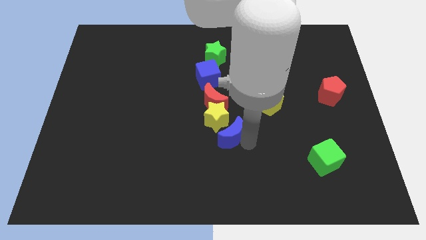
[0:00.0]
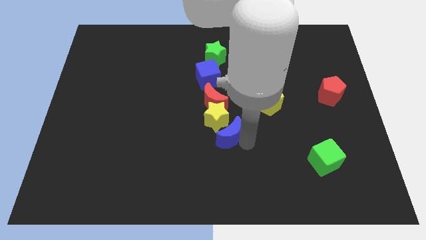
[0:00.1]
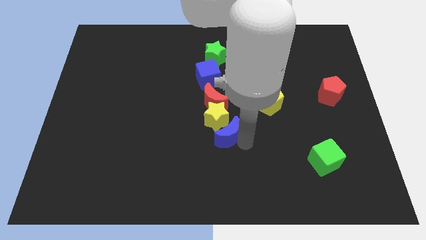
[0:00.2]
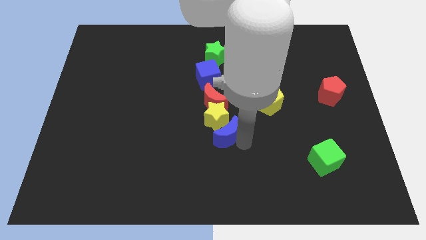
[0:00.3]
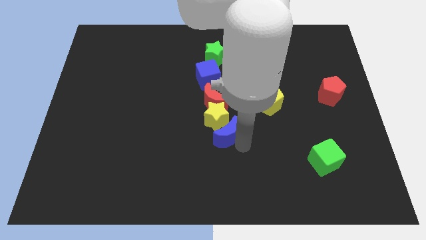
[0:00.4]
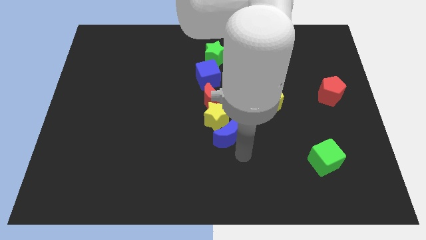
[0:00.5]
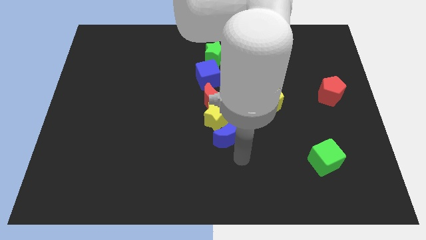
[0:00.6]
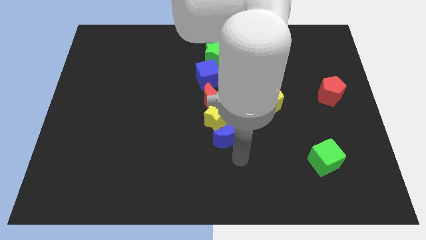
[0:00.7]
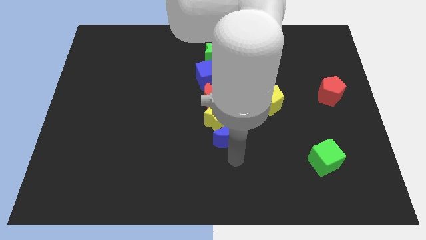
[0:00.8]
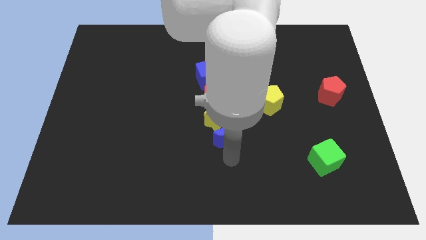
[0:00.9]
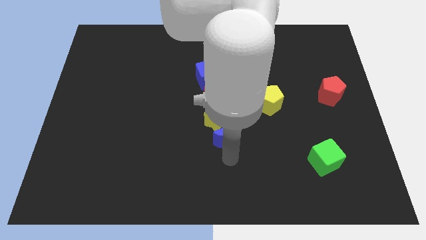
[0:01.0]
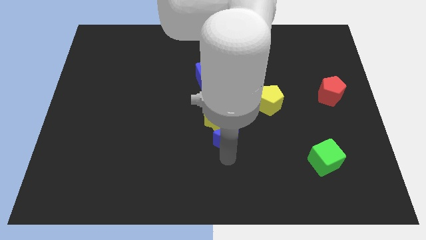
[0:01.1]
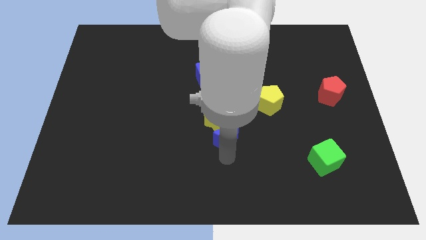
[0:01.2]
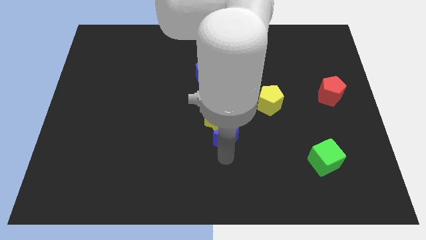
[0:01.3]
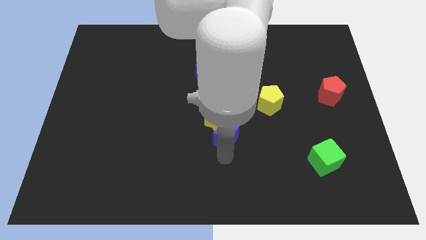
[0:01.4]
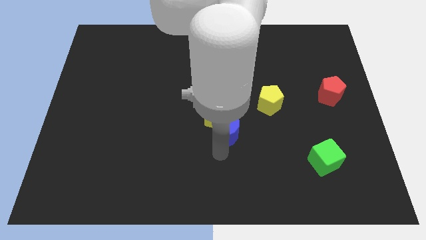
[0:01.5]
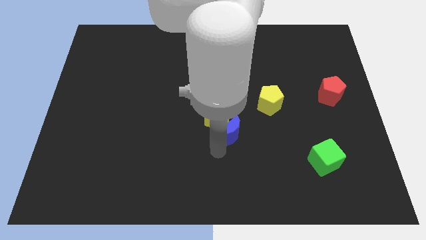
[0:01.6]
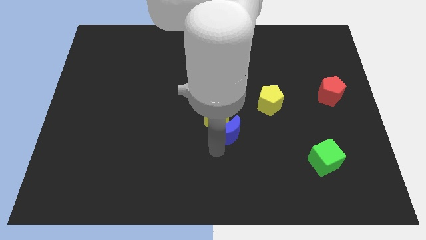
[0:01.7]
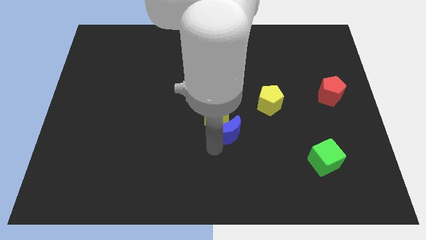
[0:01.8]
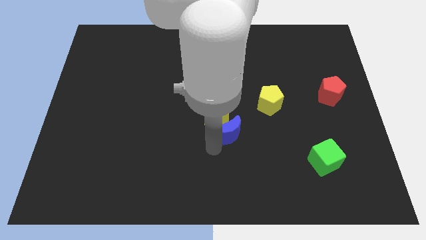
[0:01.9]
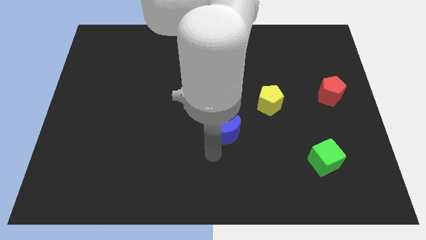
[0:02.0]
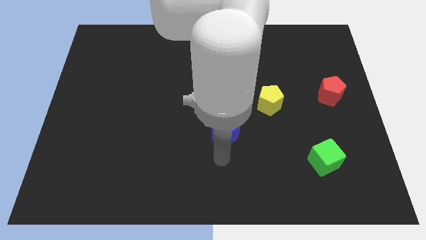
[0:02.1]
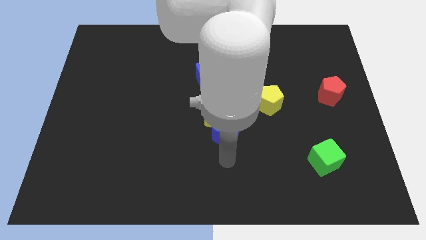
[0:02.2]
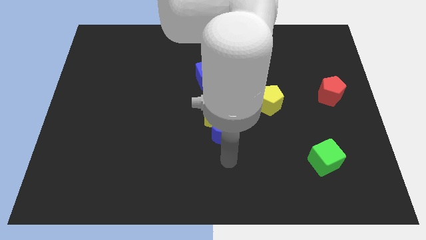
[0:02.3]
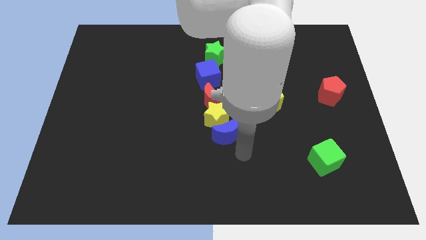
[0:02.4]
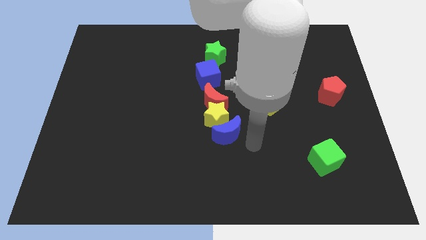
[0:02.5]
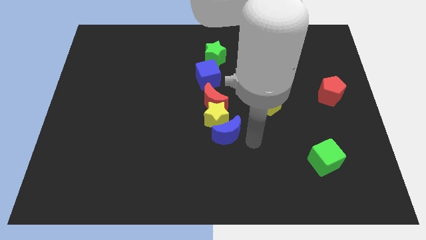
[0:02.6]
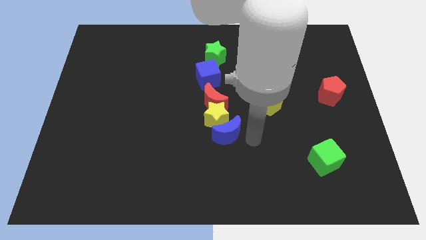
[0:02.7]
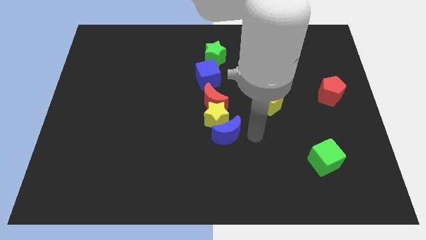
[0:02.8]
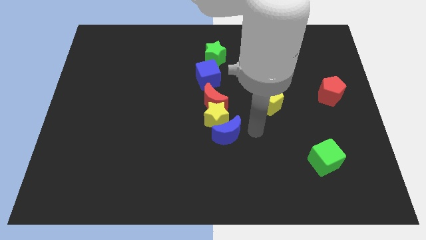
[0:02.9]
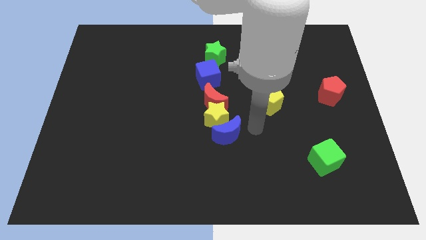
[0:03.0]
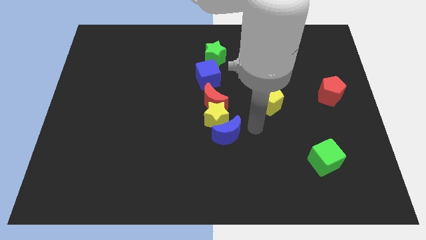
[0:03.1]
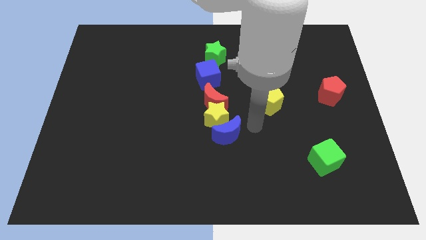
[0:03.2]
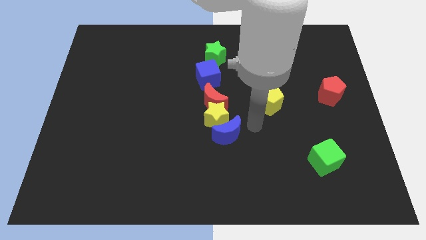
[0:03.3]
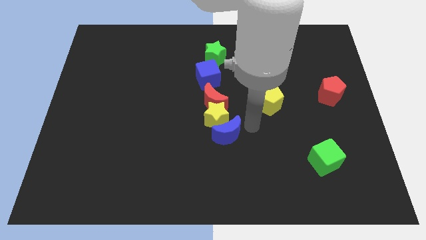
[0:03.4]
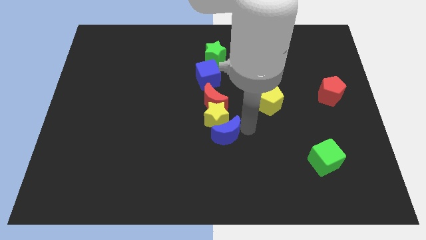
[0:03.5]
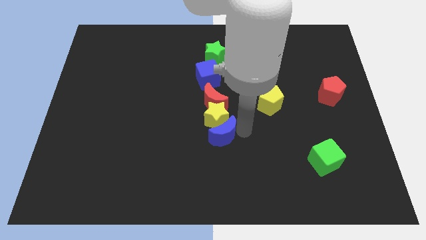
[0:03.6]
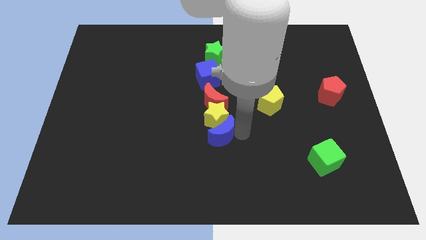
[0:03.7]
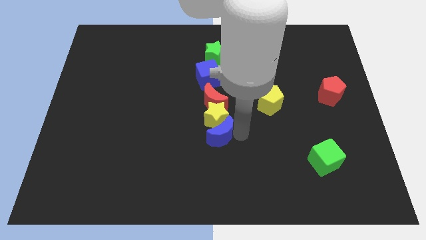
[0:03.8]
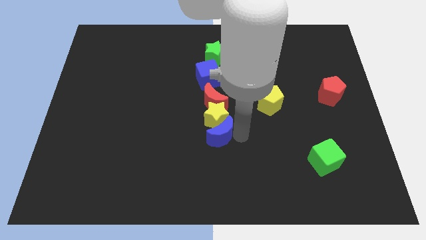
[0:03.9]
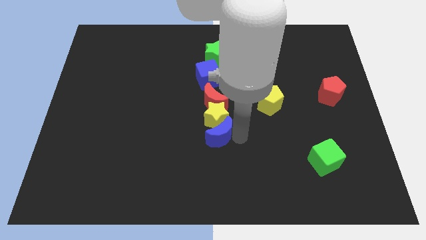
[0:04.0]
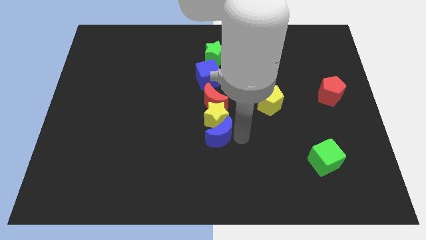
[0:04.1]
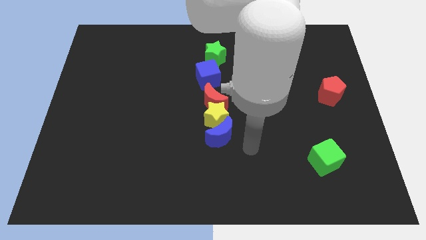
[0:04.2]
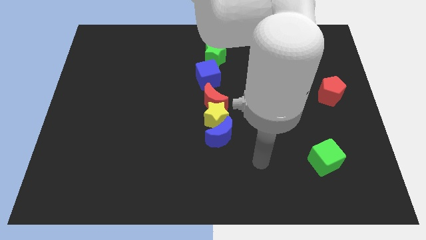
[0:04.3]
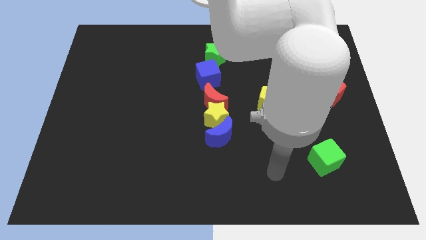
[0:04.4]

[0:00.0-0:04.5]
put blue moon at the bottom side of the yellow star

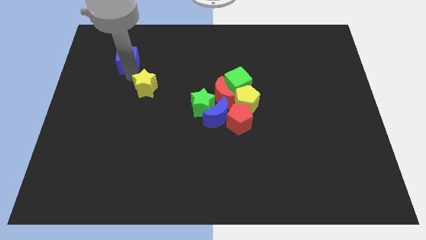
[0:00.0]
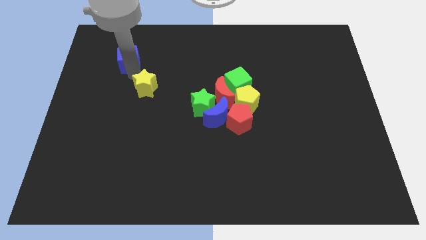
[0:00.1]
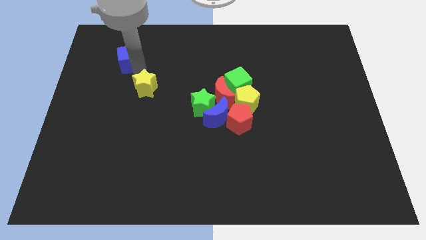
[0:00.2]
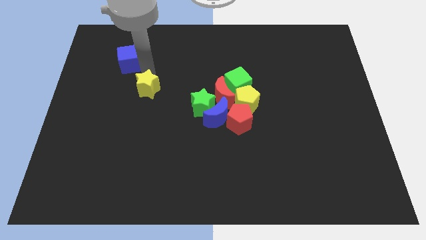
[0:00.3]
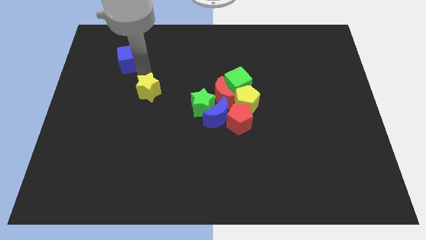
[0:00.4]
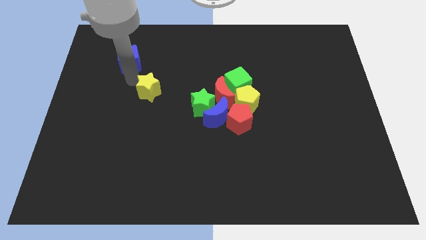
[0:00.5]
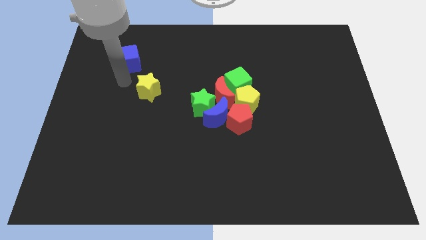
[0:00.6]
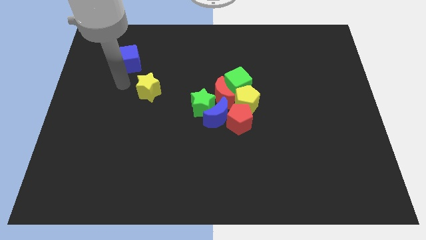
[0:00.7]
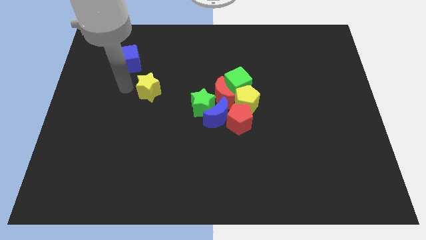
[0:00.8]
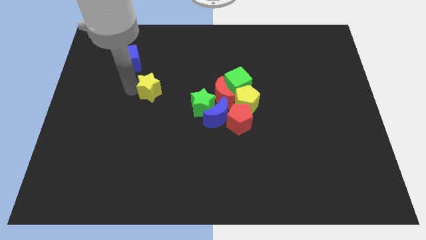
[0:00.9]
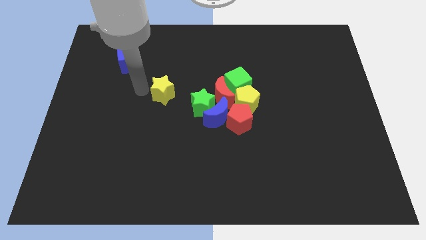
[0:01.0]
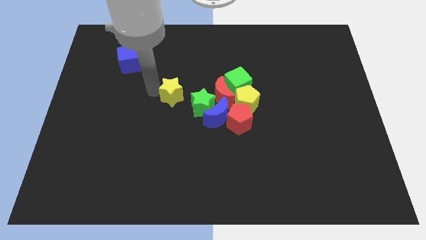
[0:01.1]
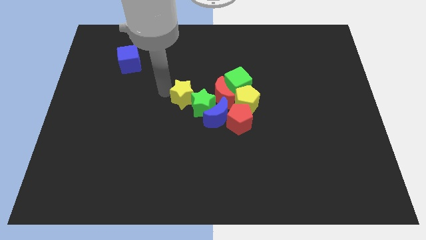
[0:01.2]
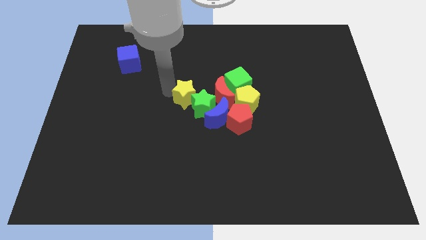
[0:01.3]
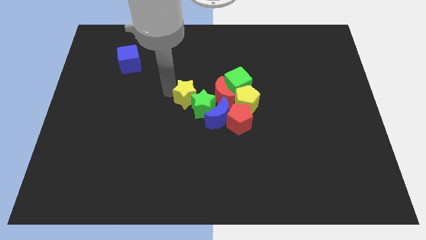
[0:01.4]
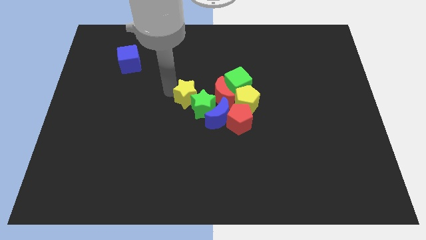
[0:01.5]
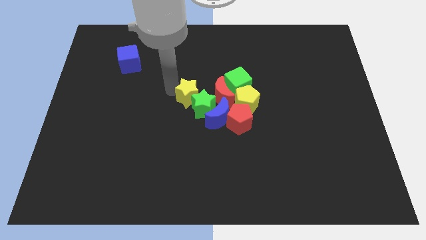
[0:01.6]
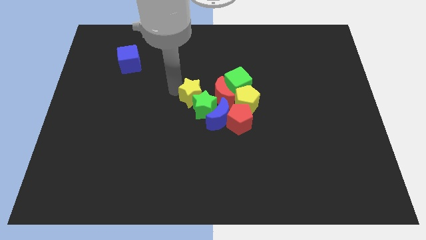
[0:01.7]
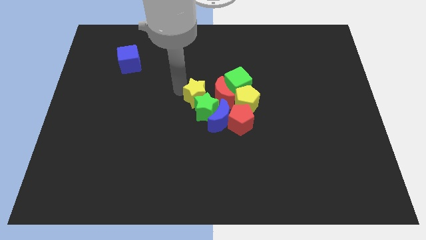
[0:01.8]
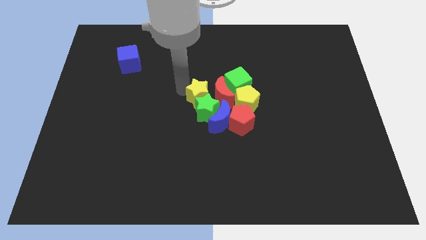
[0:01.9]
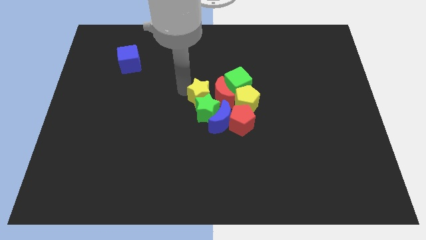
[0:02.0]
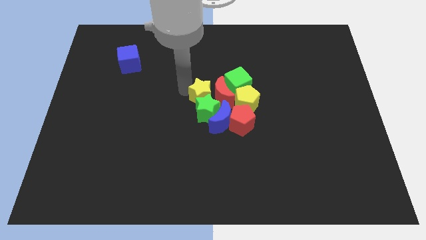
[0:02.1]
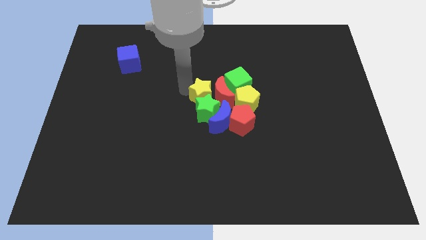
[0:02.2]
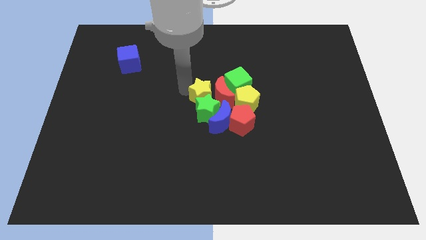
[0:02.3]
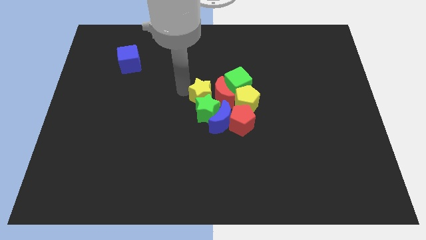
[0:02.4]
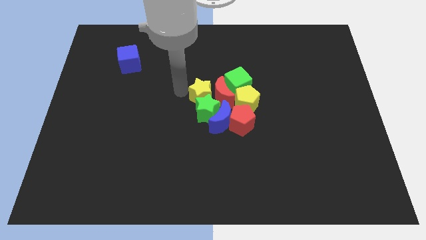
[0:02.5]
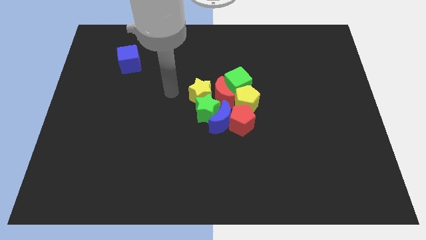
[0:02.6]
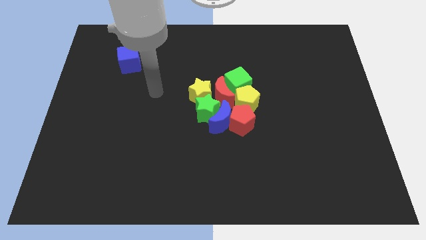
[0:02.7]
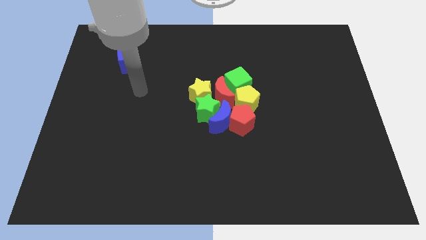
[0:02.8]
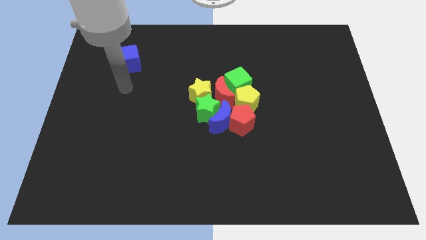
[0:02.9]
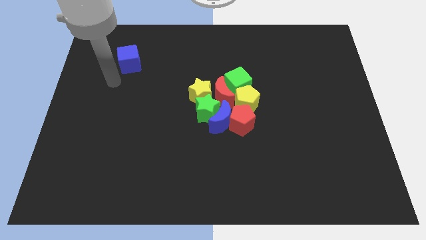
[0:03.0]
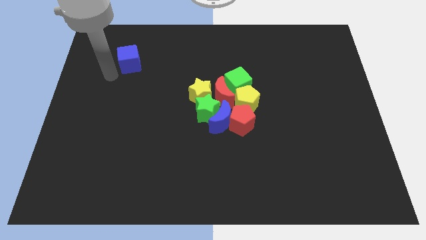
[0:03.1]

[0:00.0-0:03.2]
move the yellow star to the top of the green star

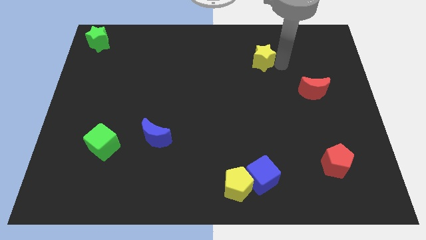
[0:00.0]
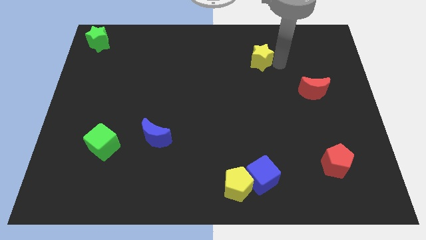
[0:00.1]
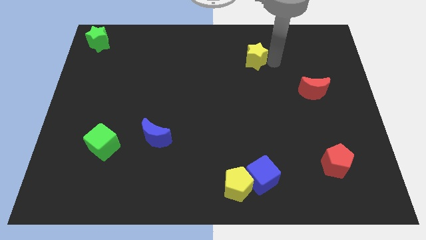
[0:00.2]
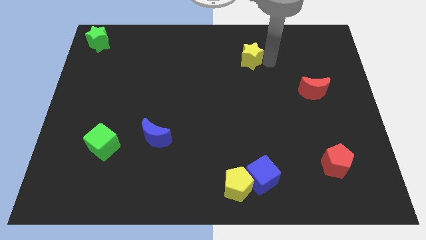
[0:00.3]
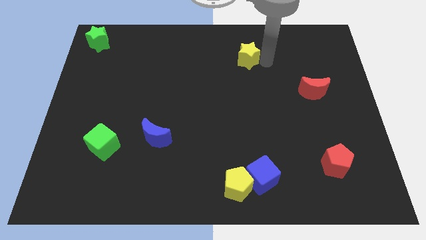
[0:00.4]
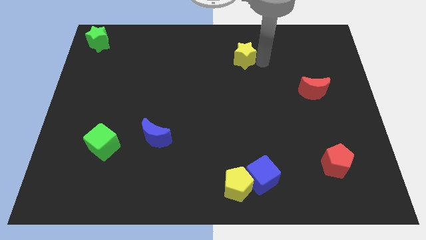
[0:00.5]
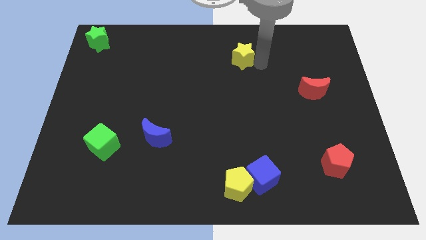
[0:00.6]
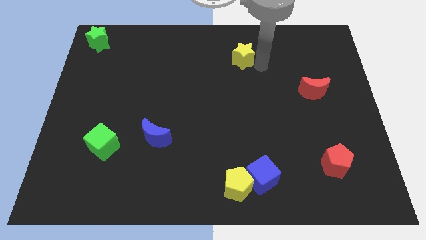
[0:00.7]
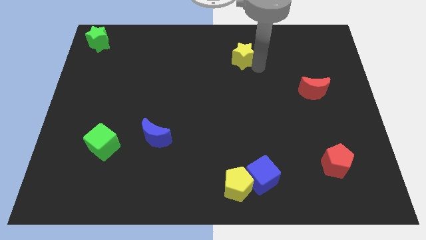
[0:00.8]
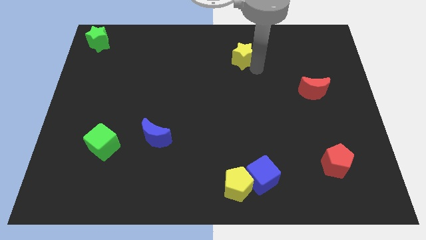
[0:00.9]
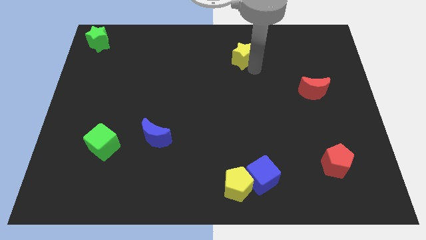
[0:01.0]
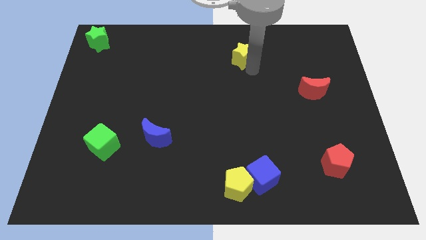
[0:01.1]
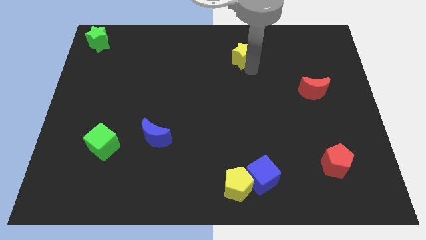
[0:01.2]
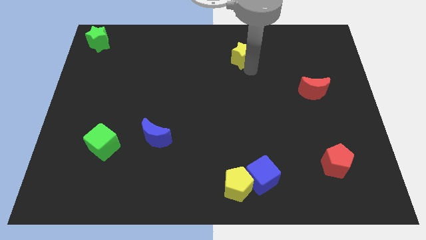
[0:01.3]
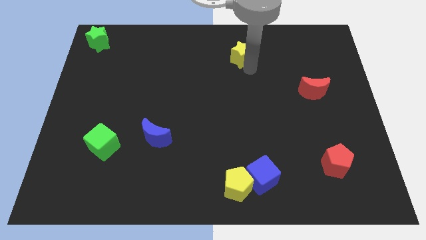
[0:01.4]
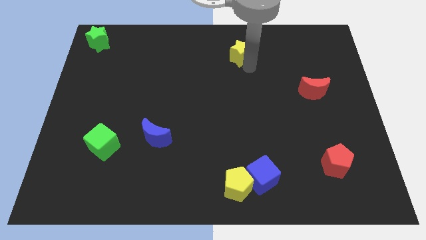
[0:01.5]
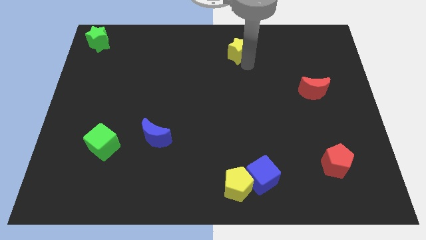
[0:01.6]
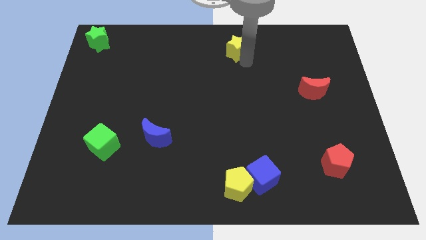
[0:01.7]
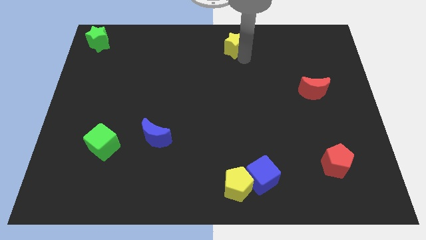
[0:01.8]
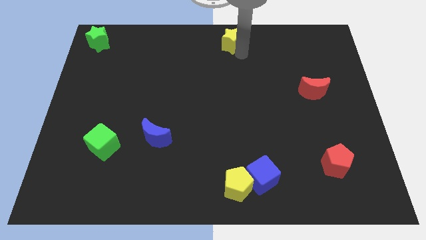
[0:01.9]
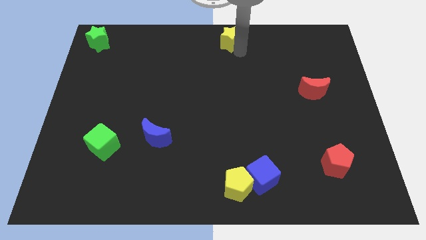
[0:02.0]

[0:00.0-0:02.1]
move the yellow star to the top center
